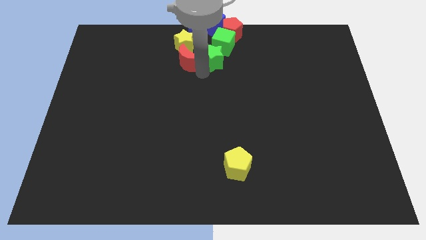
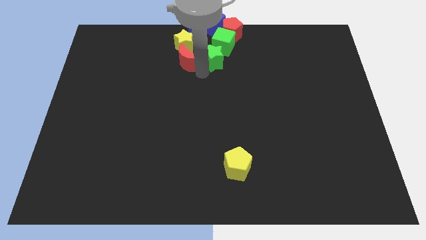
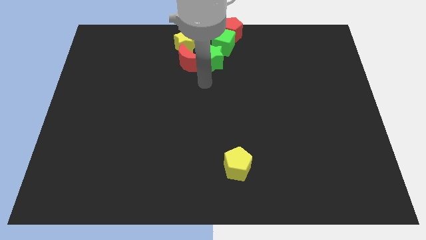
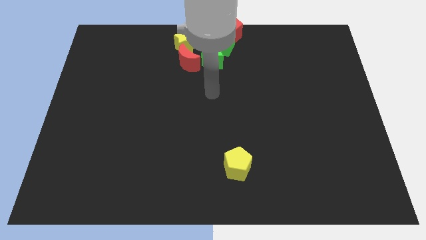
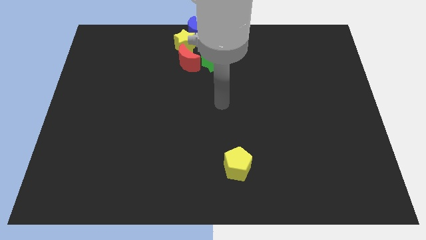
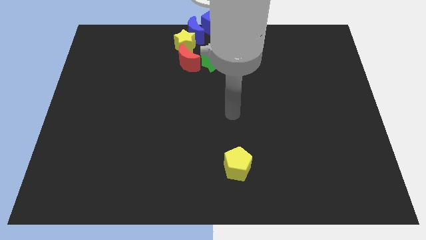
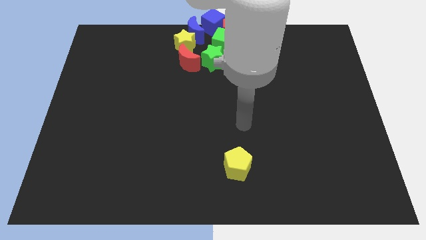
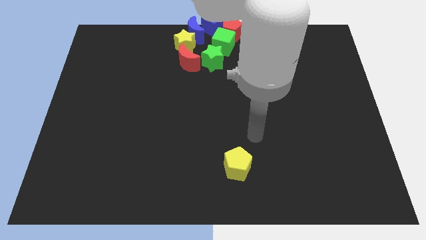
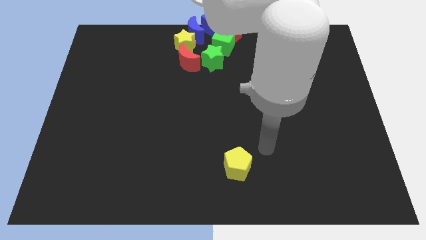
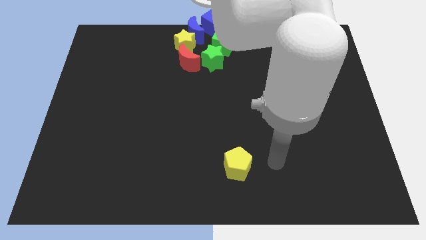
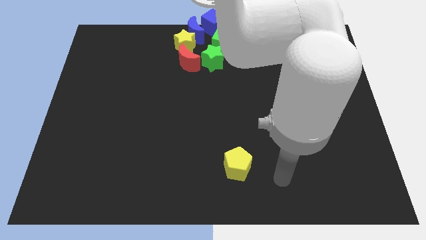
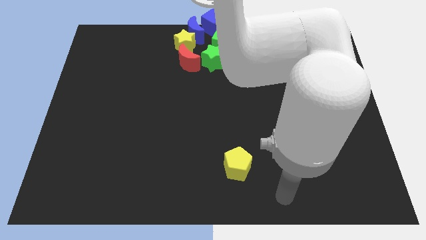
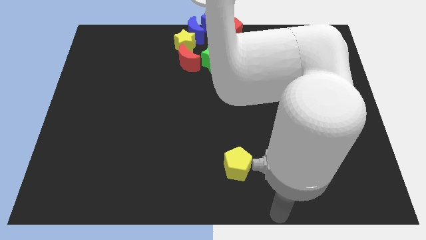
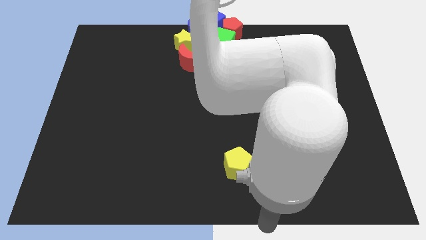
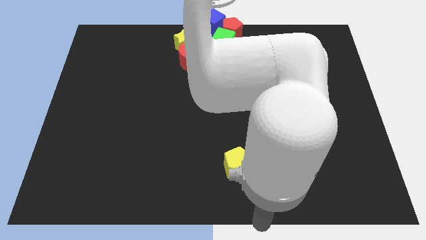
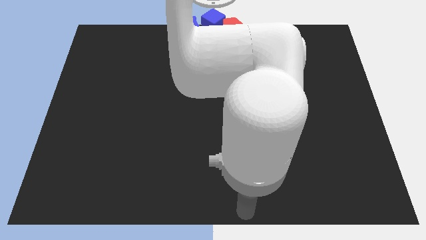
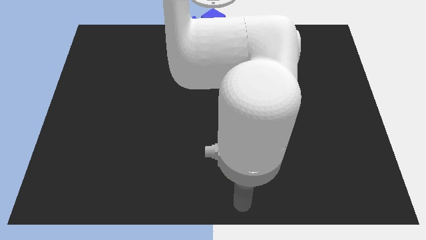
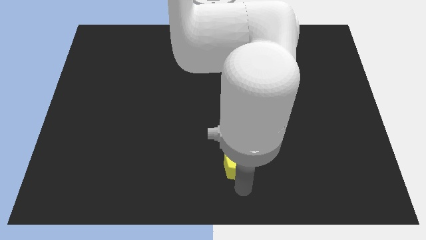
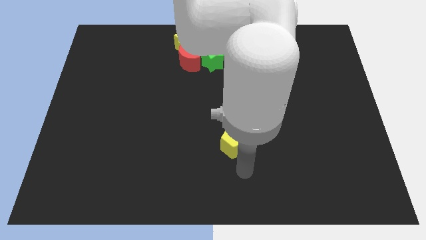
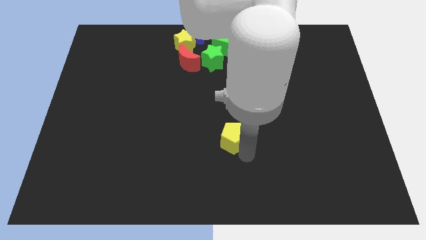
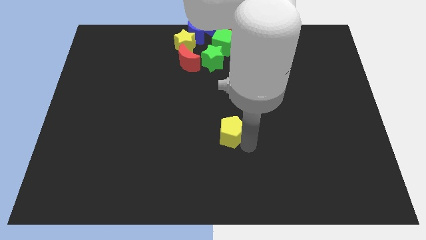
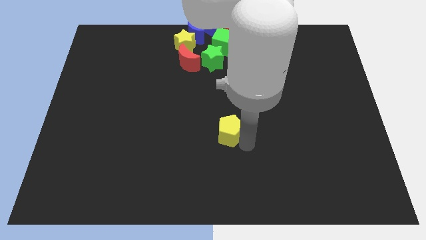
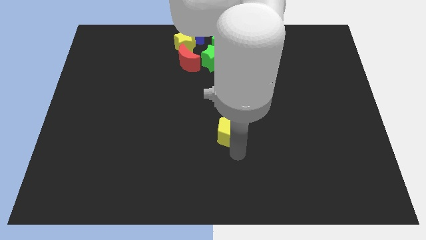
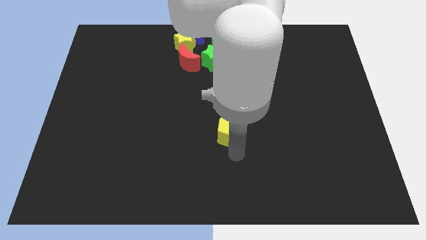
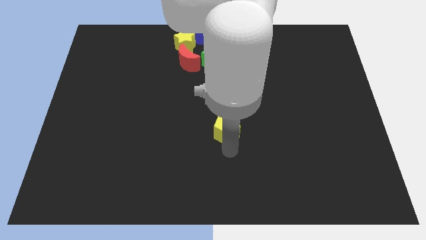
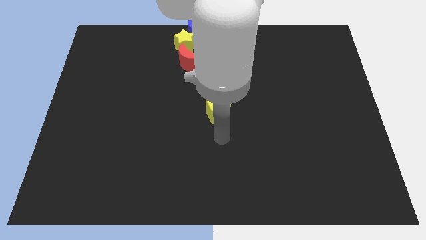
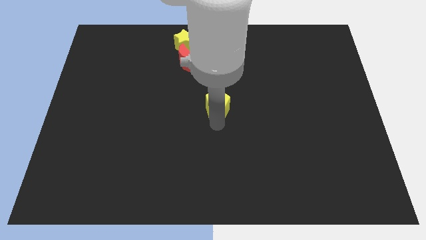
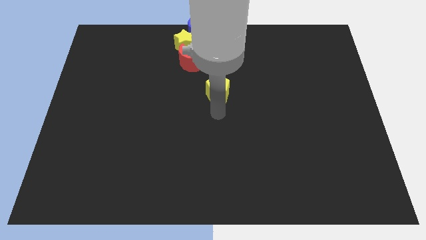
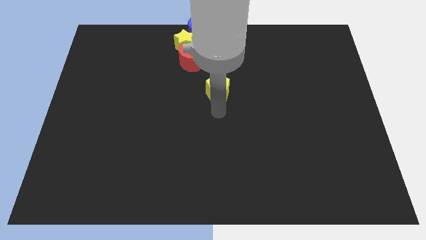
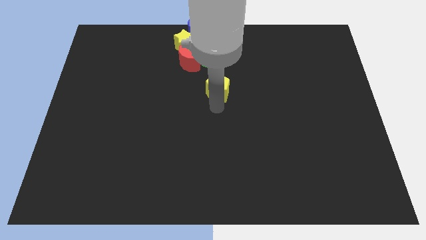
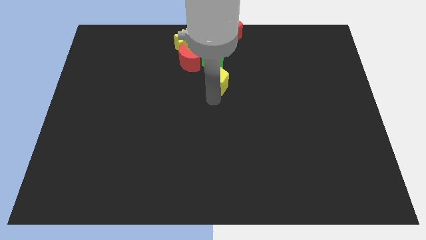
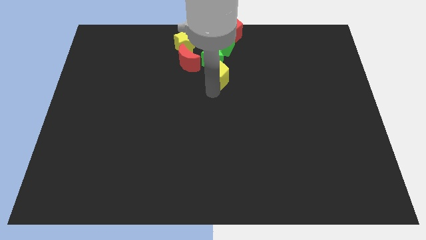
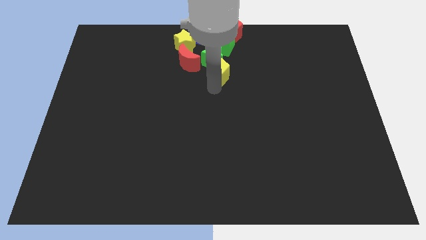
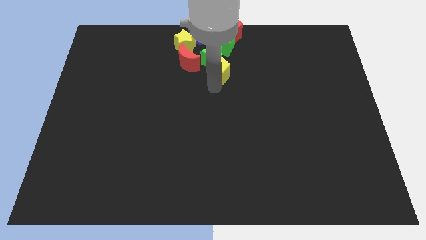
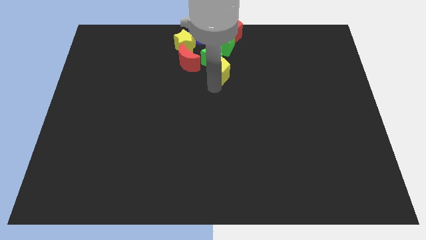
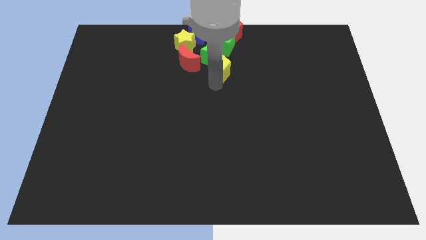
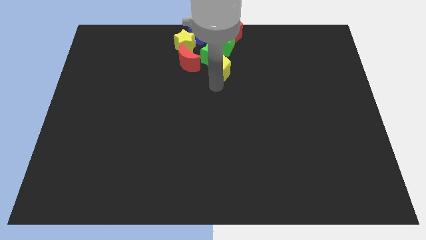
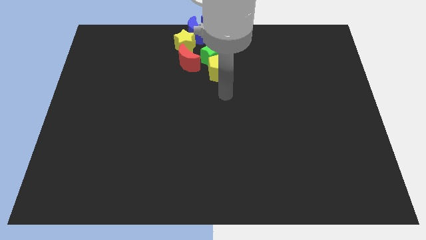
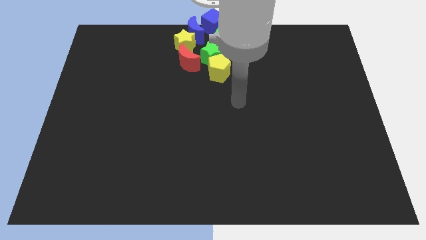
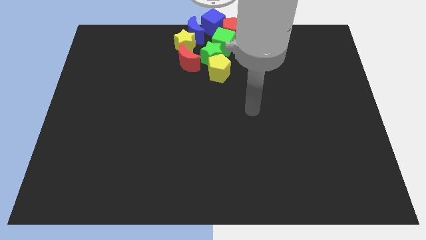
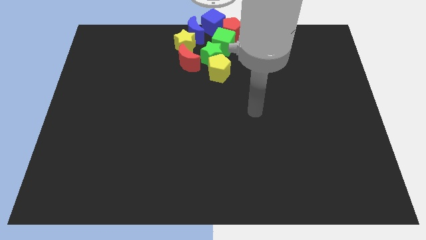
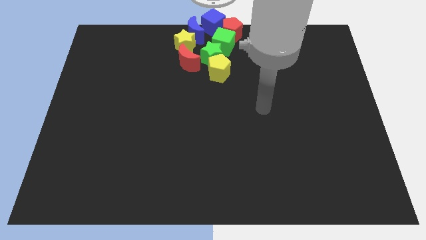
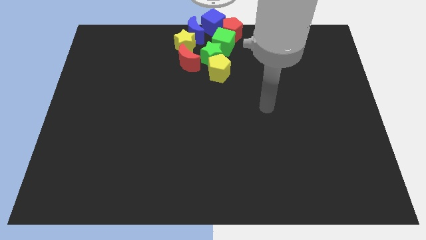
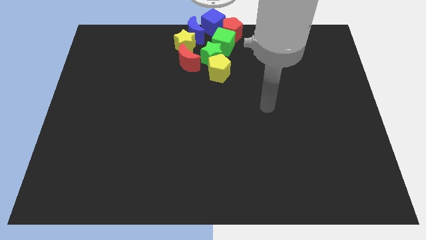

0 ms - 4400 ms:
push the yellow pentagon into the green star

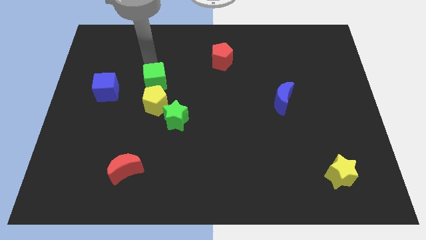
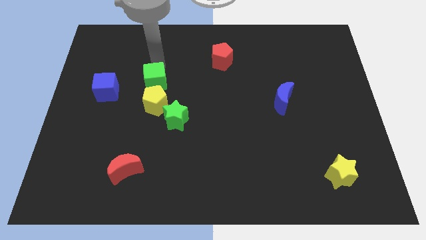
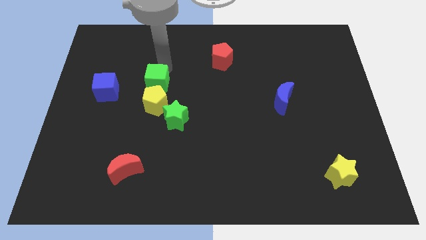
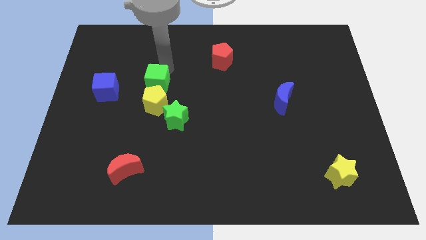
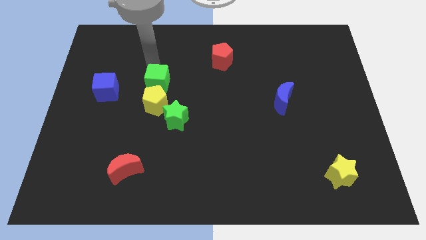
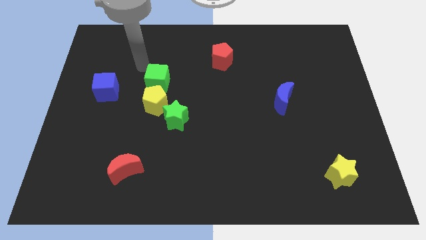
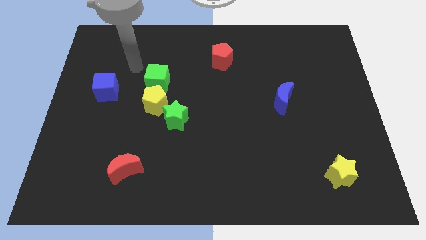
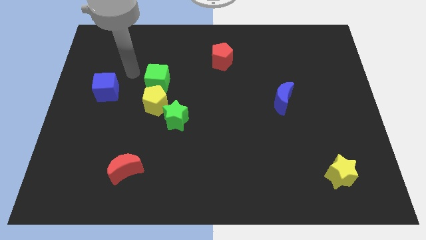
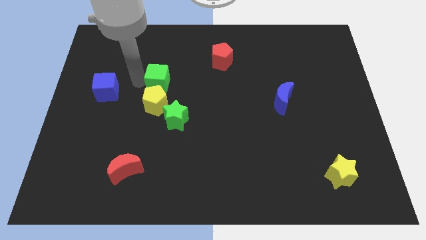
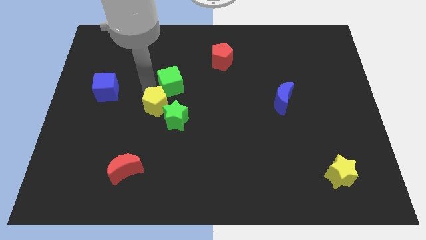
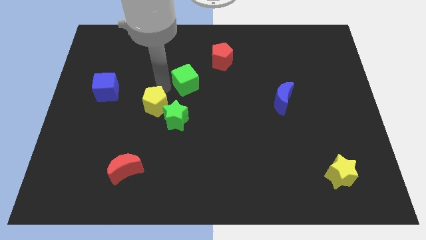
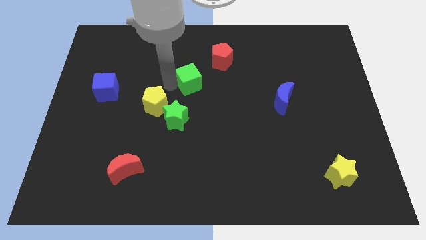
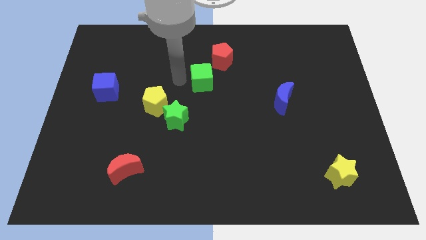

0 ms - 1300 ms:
separate the green cube and the yellow pentagon

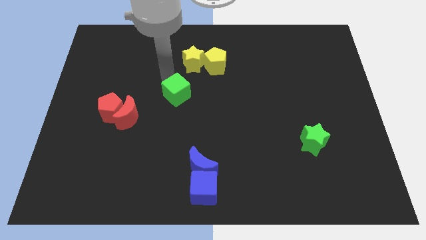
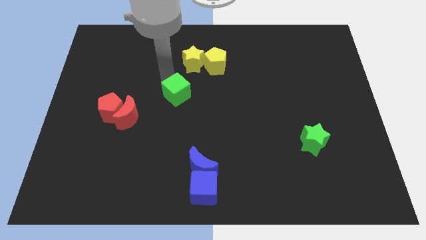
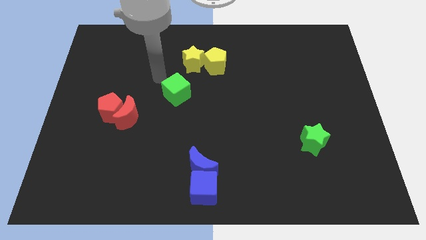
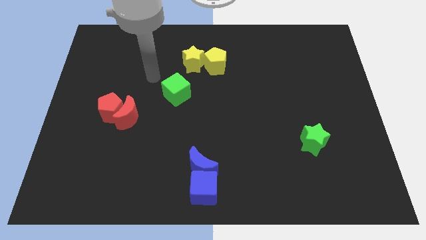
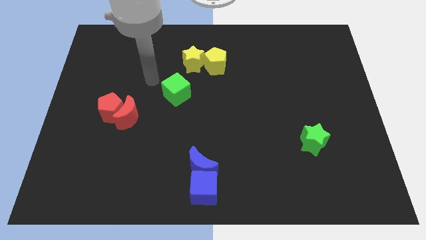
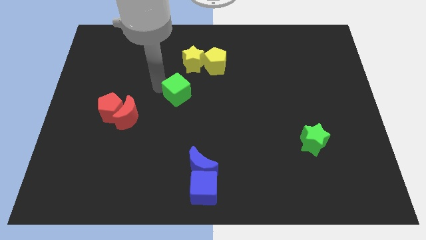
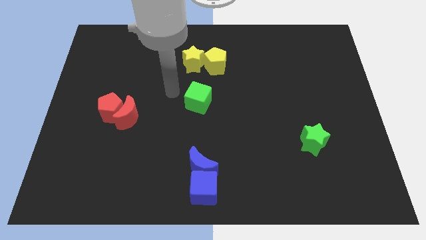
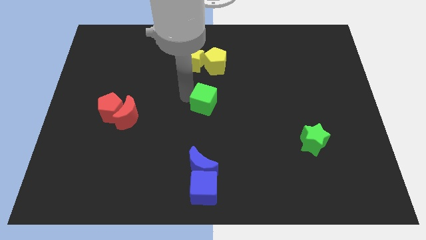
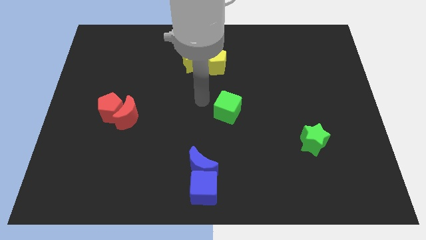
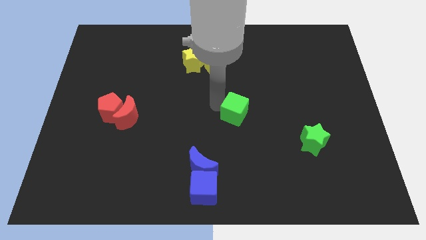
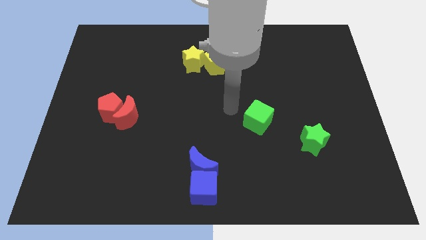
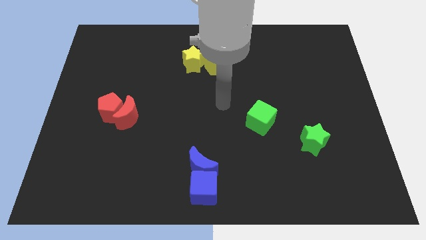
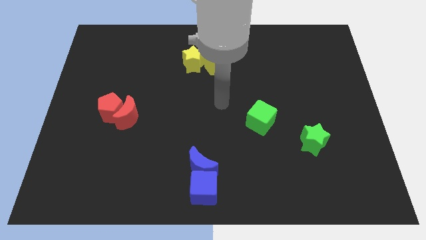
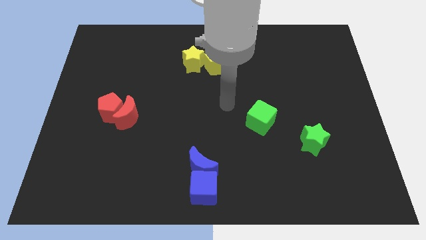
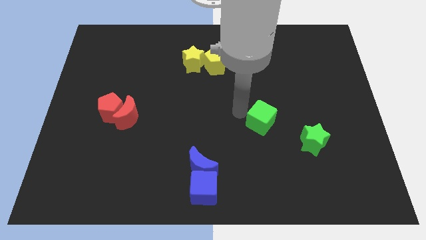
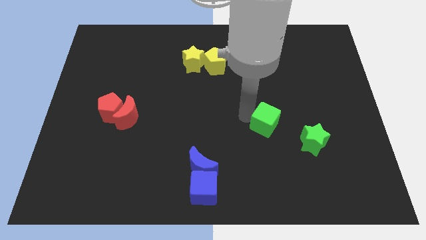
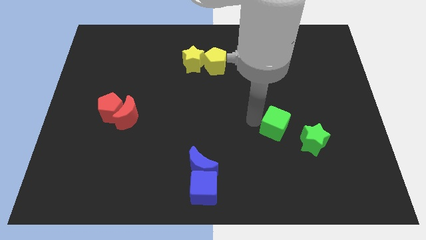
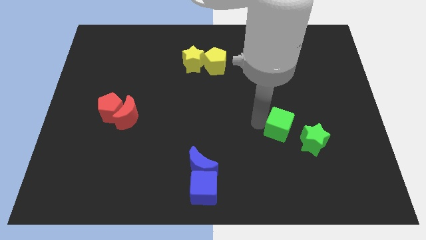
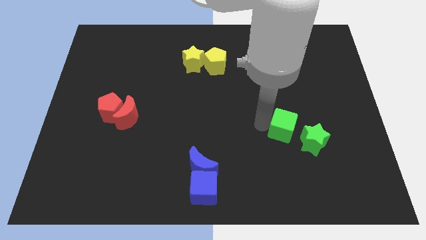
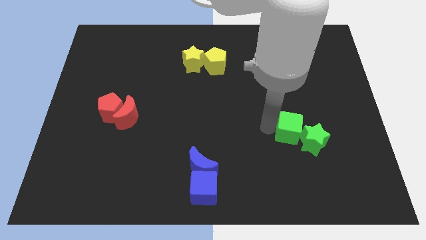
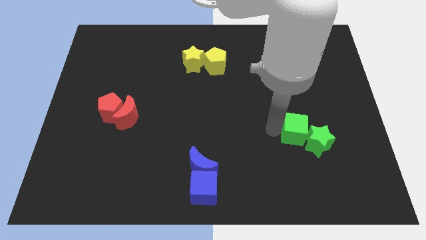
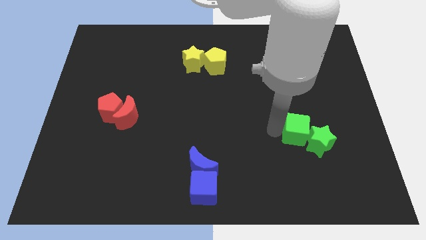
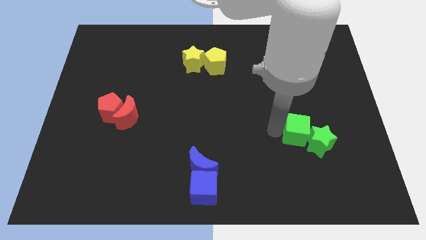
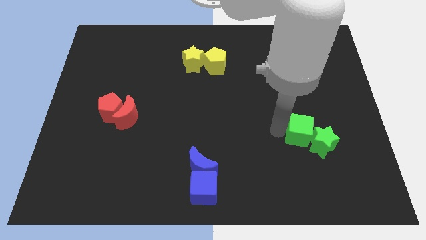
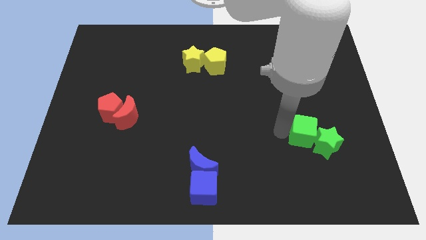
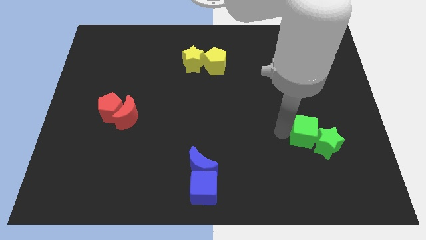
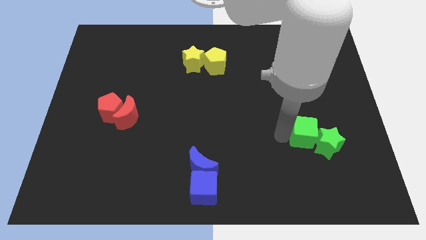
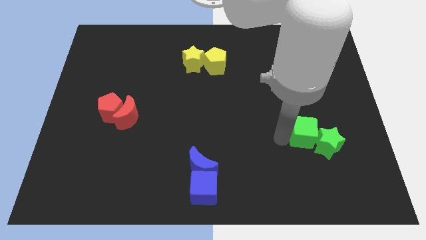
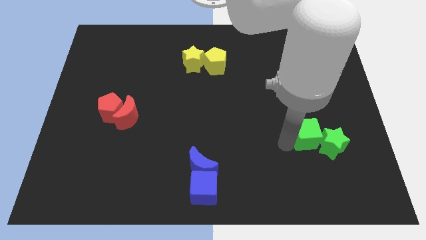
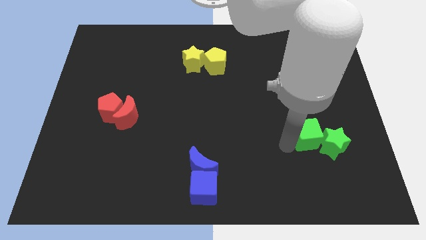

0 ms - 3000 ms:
push the green cube into green star

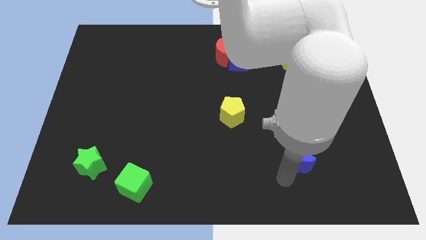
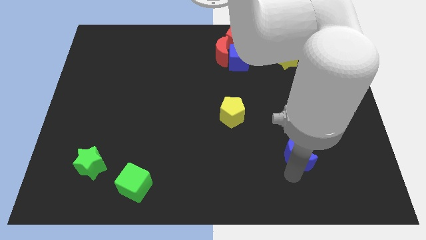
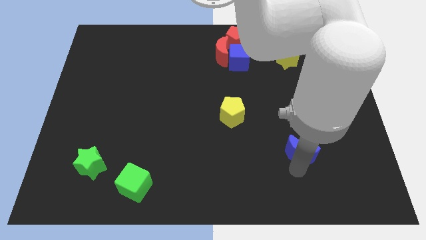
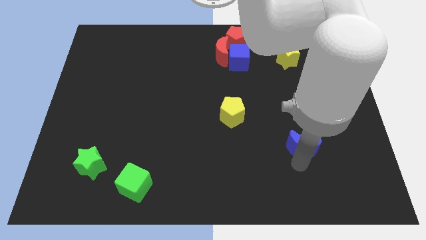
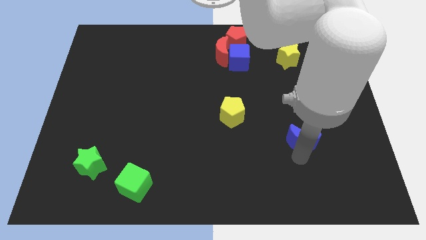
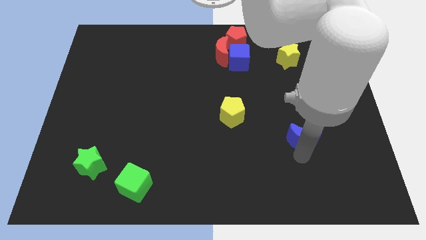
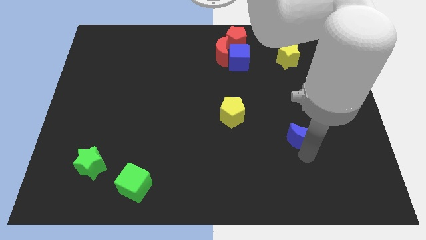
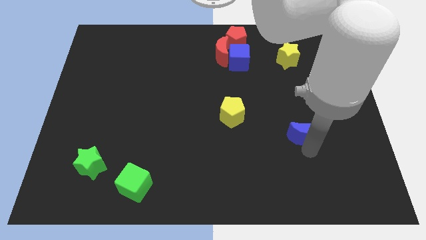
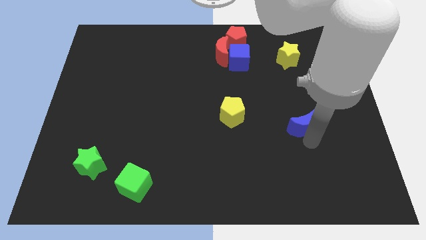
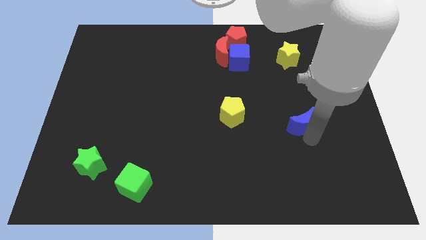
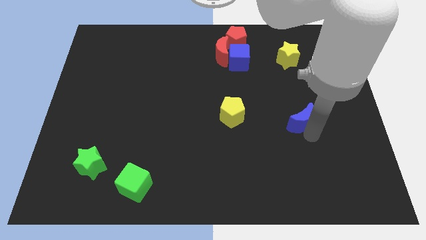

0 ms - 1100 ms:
push blue moon slightly upwards
